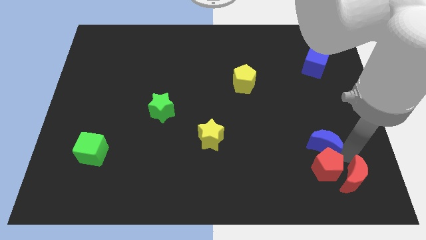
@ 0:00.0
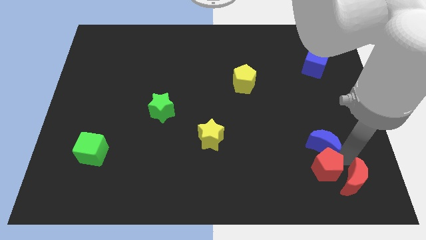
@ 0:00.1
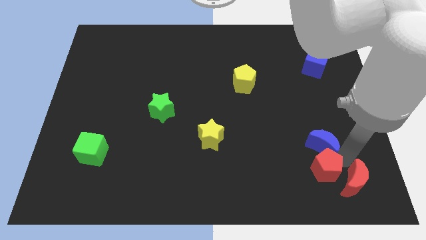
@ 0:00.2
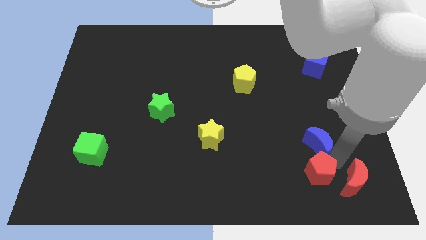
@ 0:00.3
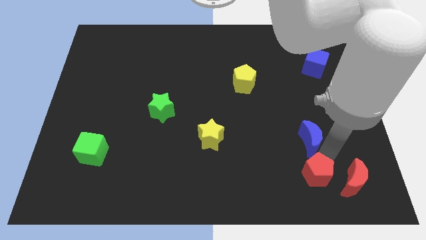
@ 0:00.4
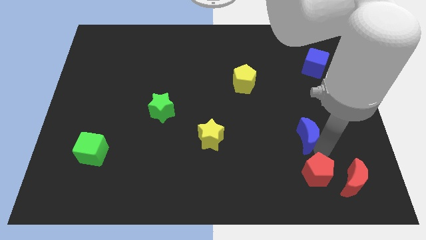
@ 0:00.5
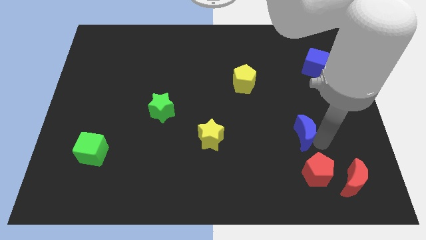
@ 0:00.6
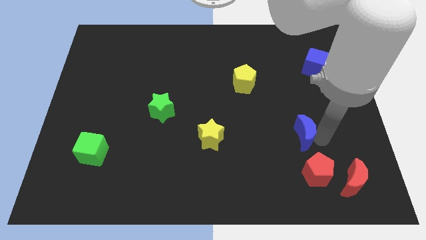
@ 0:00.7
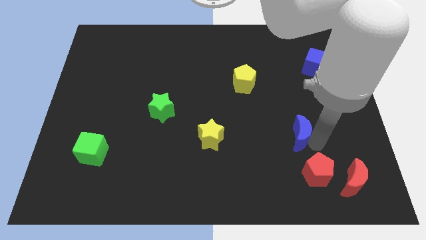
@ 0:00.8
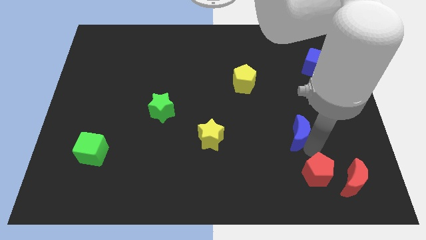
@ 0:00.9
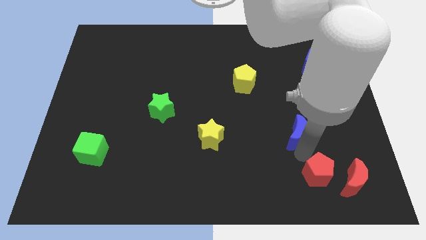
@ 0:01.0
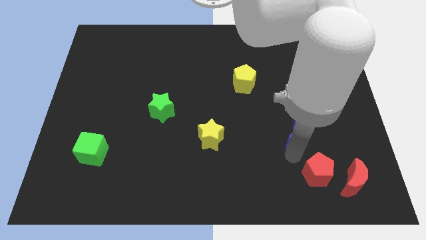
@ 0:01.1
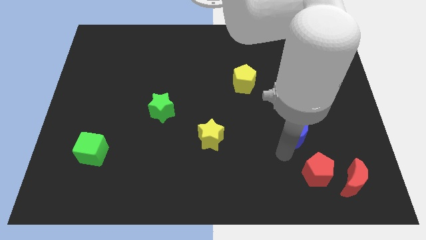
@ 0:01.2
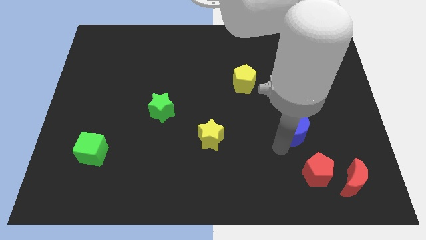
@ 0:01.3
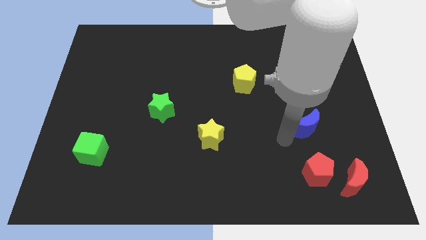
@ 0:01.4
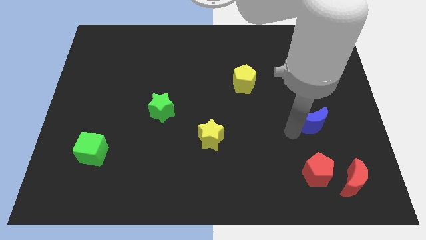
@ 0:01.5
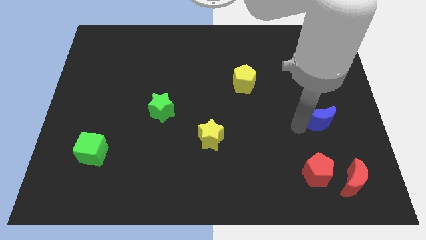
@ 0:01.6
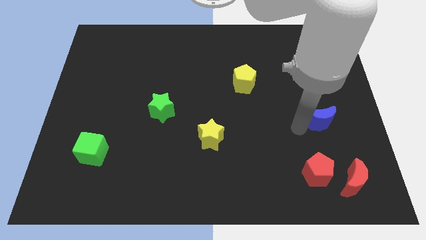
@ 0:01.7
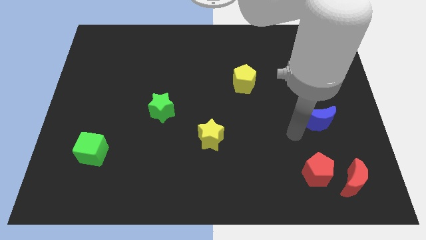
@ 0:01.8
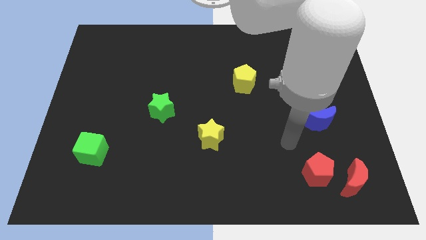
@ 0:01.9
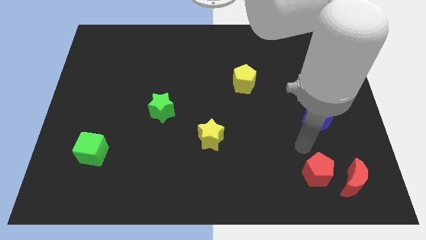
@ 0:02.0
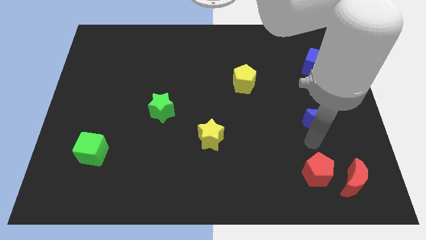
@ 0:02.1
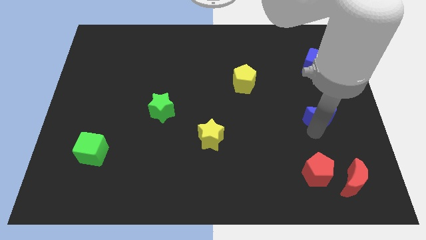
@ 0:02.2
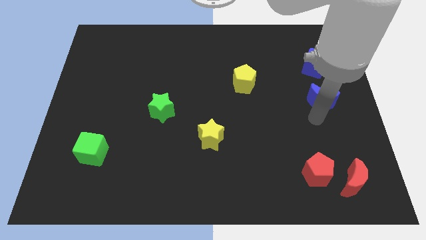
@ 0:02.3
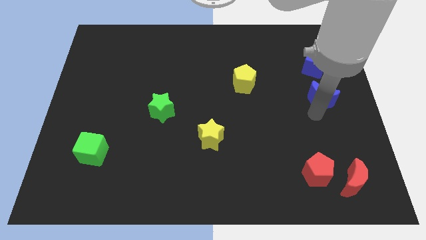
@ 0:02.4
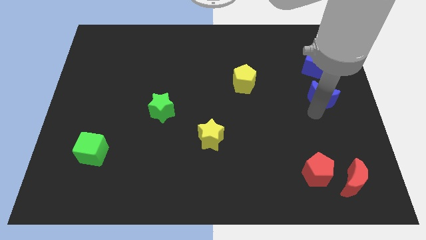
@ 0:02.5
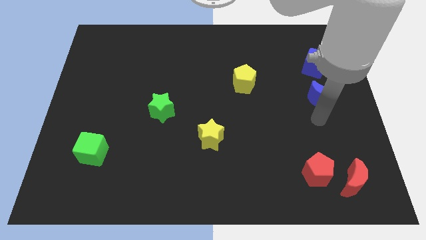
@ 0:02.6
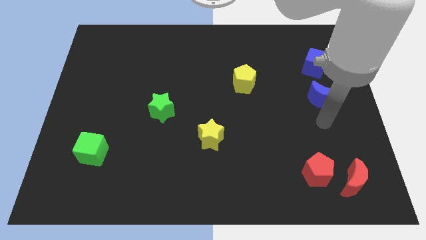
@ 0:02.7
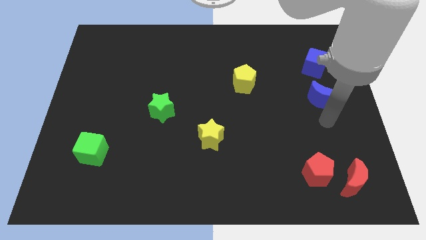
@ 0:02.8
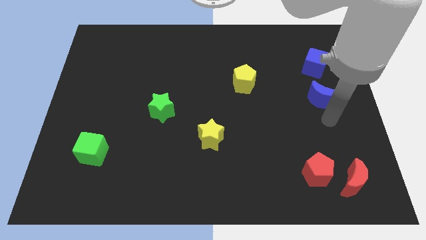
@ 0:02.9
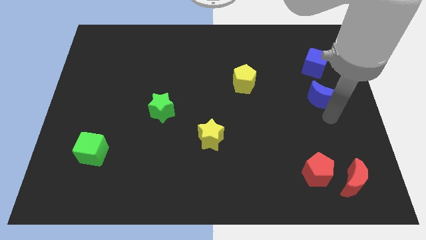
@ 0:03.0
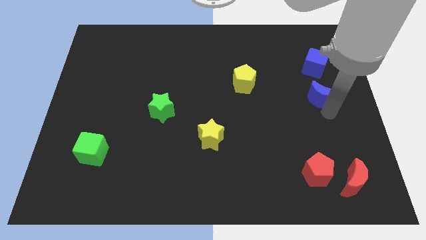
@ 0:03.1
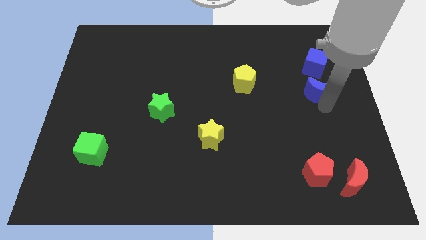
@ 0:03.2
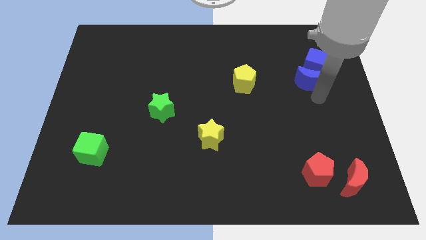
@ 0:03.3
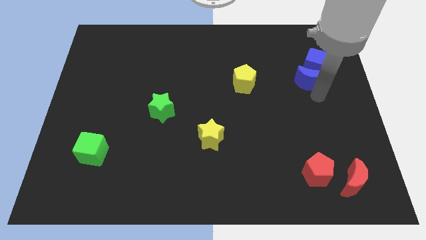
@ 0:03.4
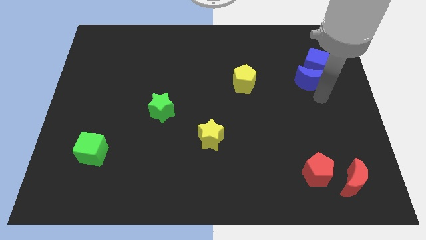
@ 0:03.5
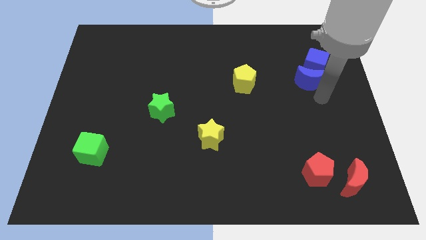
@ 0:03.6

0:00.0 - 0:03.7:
put the blue crescent to the right of the yellow pentagon

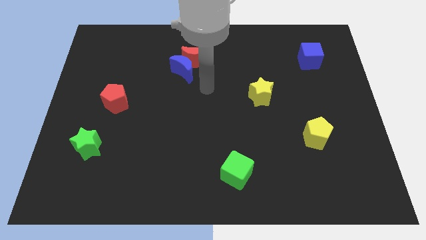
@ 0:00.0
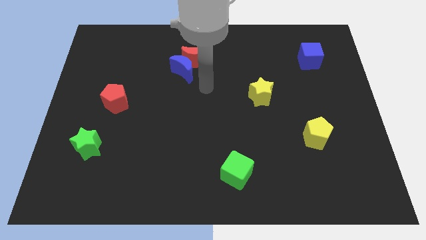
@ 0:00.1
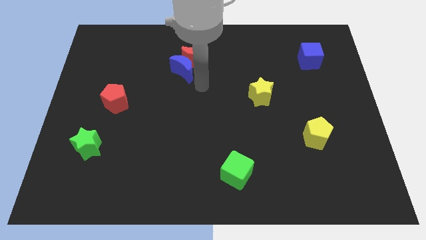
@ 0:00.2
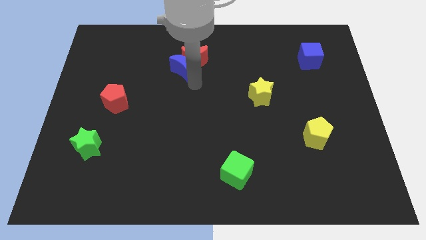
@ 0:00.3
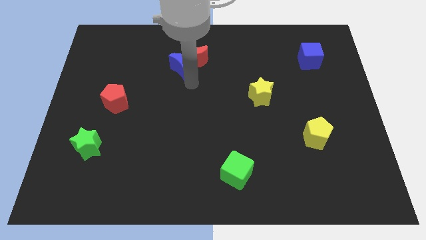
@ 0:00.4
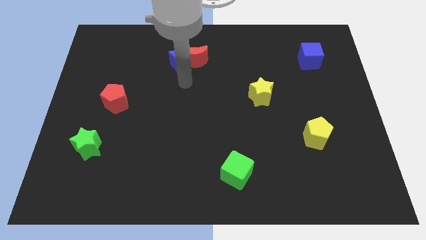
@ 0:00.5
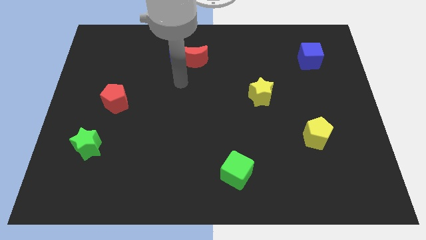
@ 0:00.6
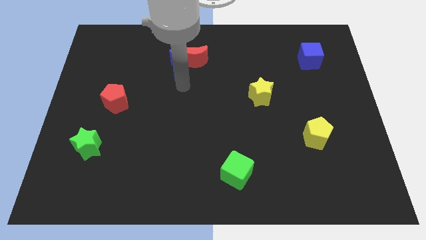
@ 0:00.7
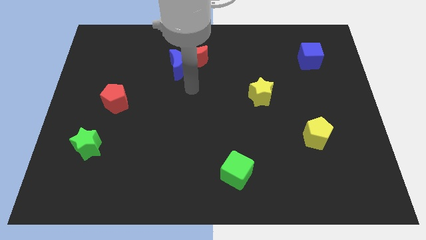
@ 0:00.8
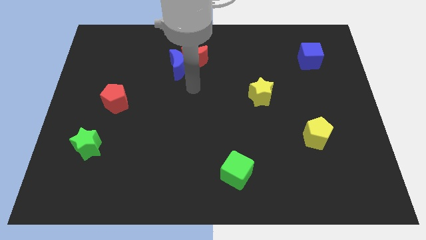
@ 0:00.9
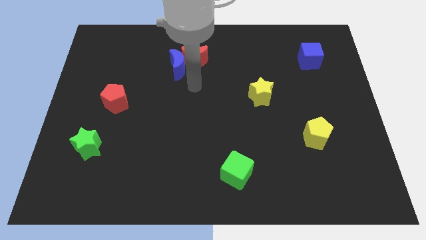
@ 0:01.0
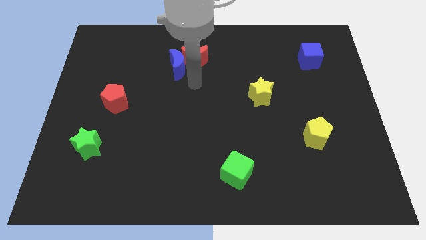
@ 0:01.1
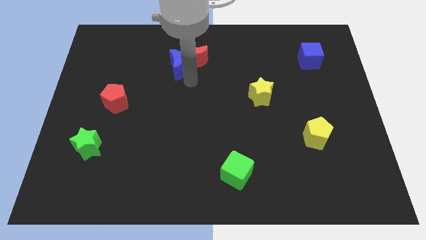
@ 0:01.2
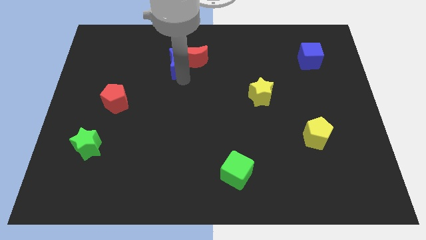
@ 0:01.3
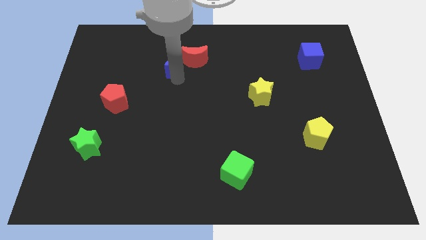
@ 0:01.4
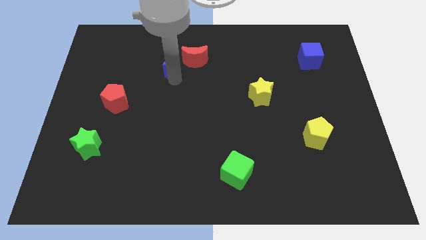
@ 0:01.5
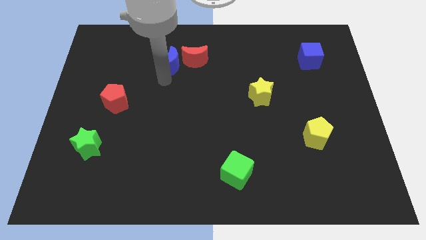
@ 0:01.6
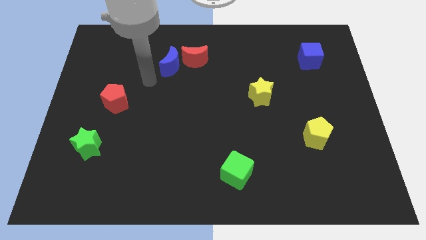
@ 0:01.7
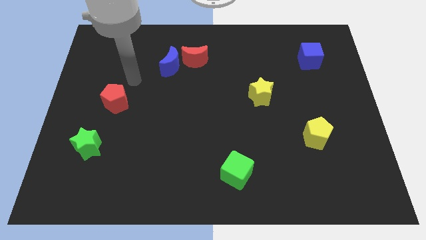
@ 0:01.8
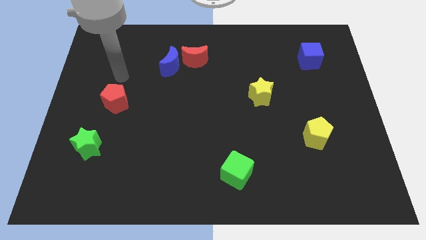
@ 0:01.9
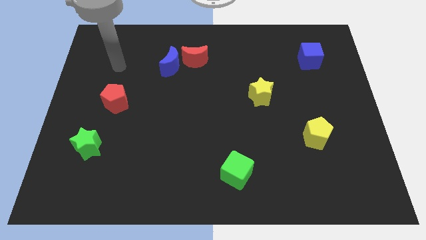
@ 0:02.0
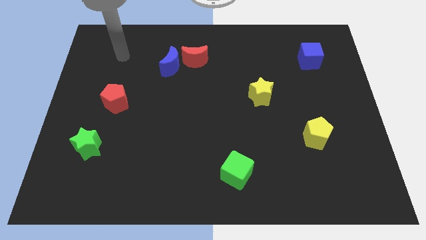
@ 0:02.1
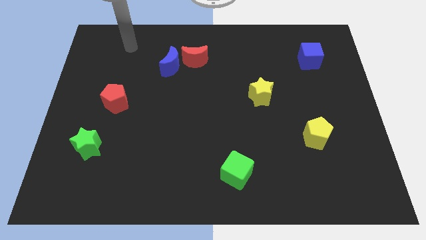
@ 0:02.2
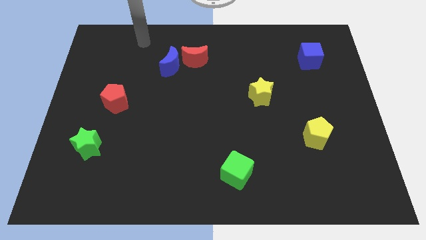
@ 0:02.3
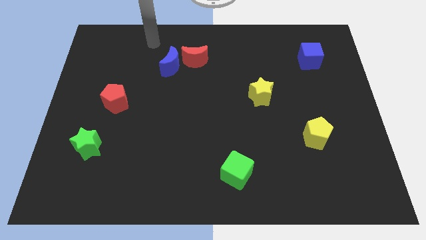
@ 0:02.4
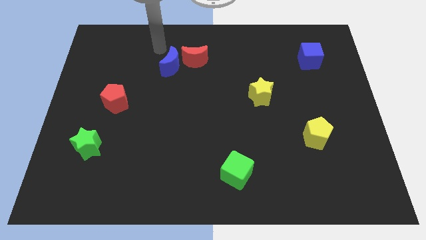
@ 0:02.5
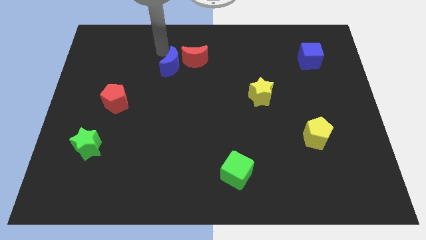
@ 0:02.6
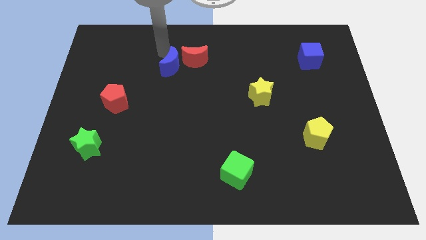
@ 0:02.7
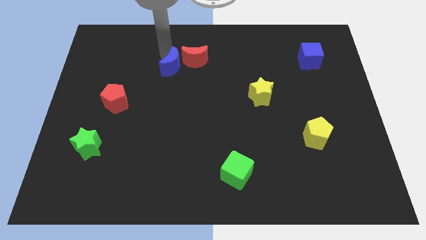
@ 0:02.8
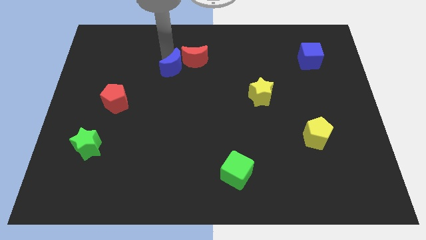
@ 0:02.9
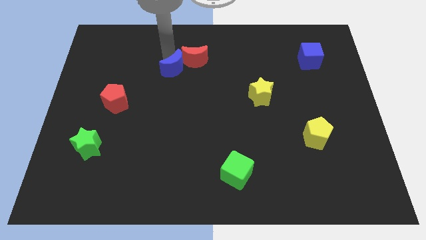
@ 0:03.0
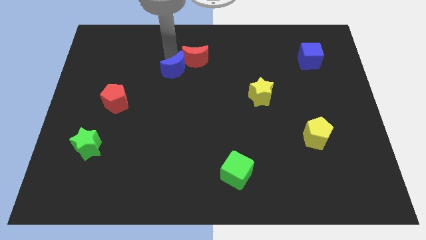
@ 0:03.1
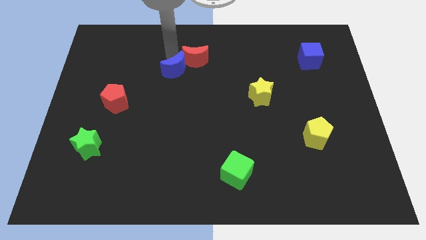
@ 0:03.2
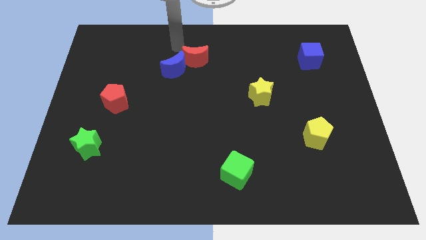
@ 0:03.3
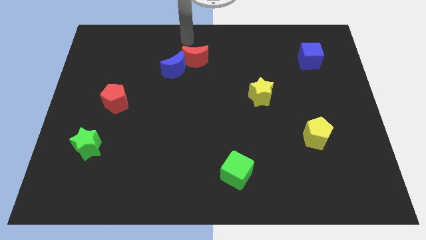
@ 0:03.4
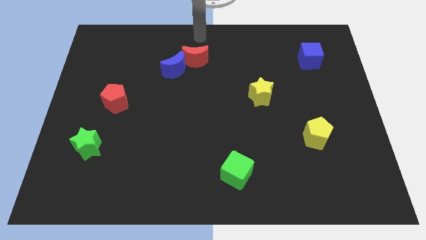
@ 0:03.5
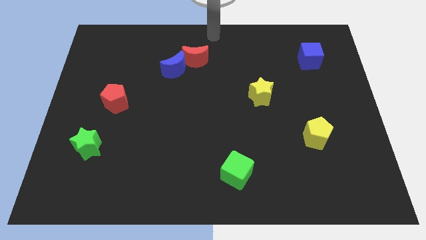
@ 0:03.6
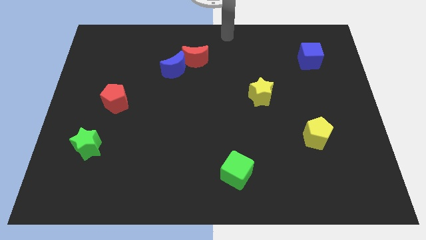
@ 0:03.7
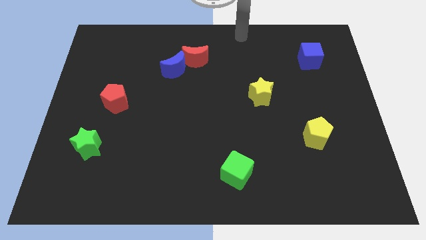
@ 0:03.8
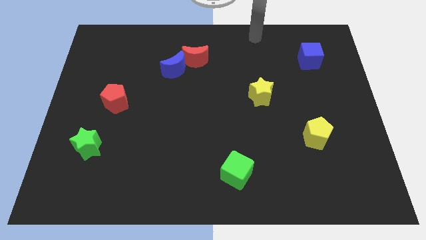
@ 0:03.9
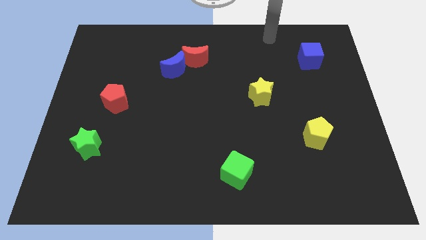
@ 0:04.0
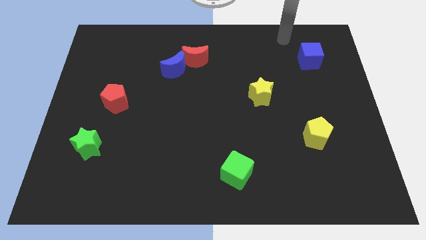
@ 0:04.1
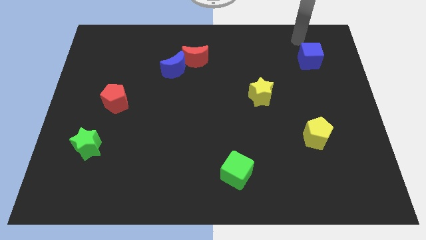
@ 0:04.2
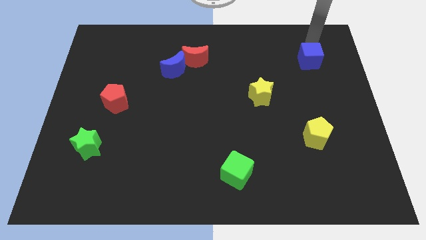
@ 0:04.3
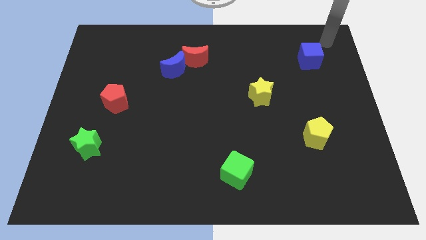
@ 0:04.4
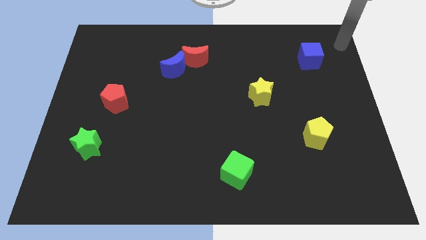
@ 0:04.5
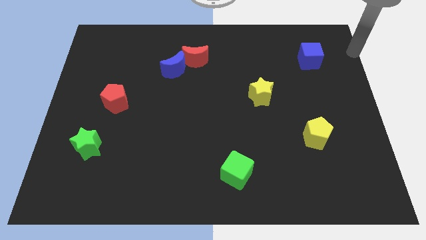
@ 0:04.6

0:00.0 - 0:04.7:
move your hand away from the blue semi circle

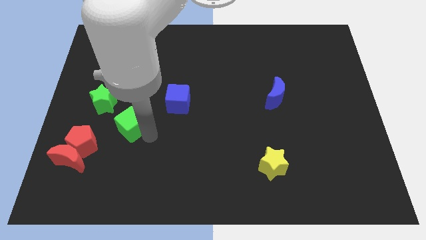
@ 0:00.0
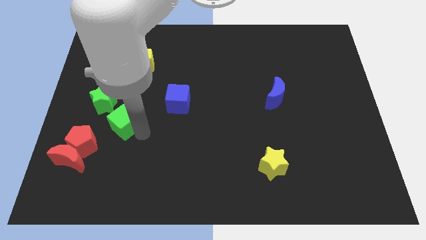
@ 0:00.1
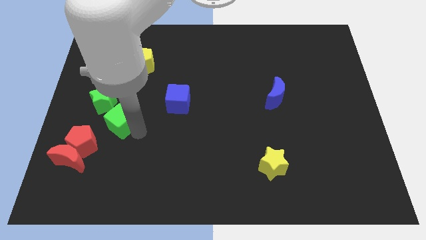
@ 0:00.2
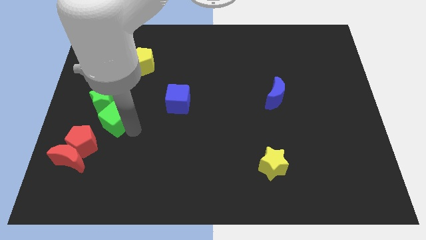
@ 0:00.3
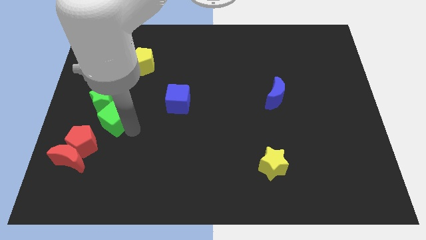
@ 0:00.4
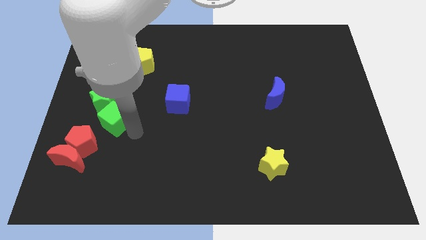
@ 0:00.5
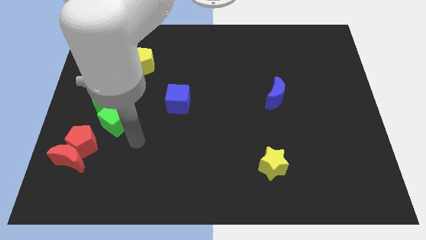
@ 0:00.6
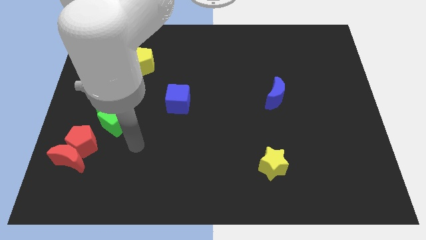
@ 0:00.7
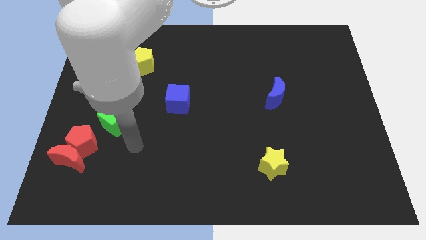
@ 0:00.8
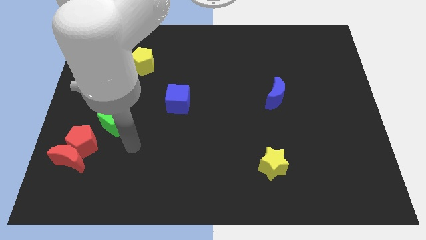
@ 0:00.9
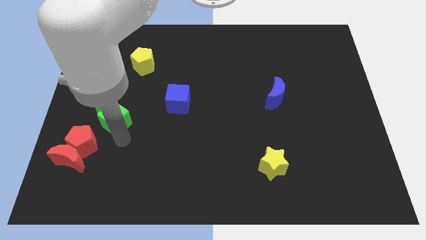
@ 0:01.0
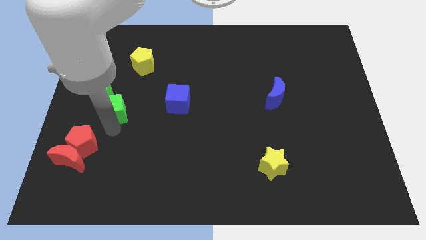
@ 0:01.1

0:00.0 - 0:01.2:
push the green cube into the green star
